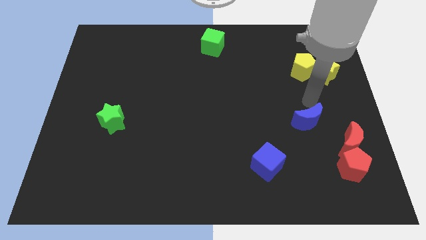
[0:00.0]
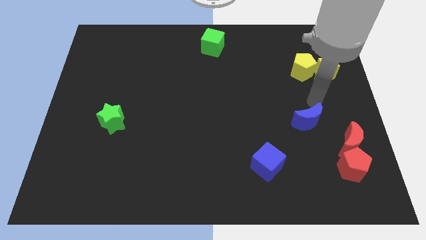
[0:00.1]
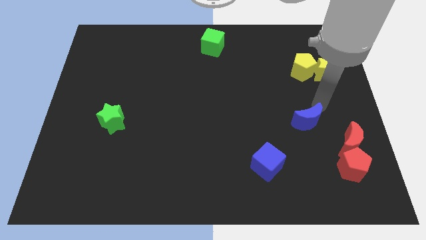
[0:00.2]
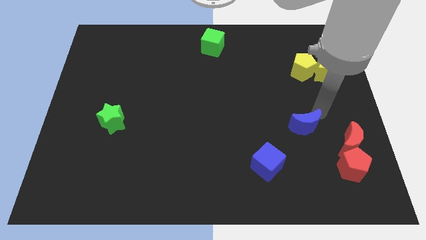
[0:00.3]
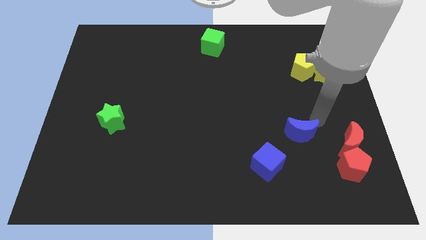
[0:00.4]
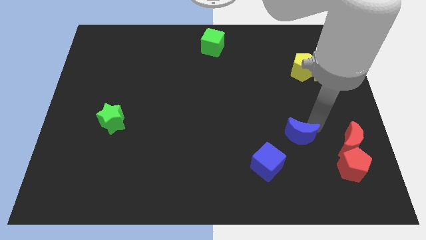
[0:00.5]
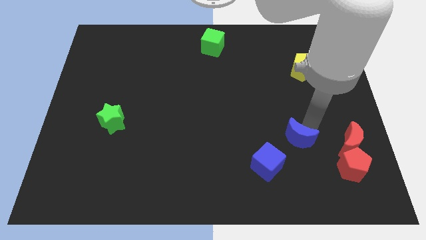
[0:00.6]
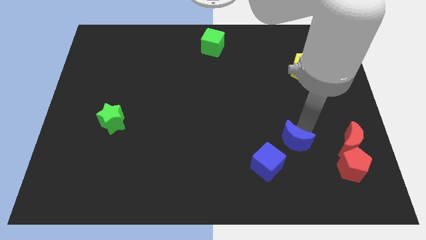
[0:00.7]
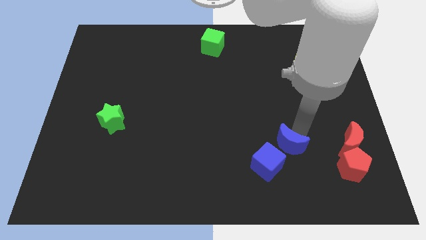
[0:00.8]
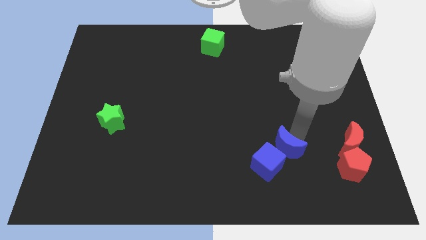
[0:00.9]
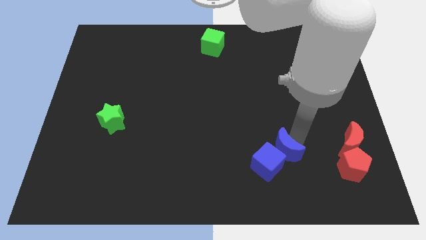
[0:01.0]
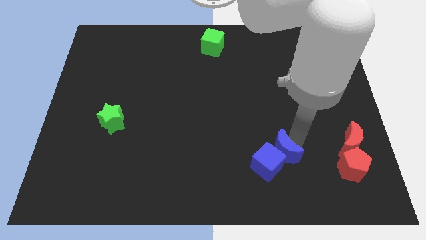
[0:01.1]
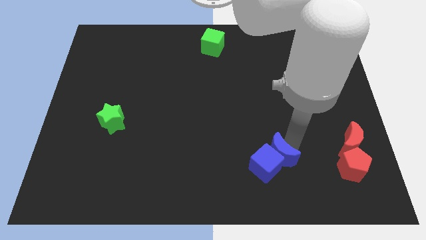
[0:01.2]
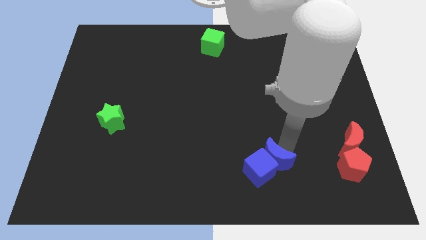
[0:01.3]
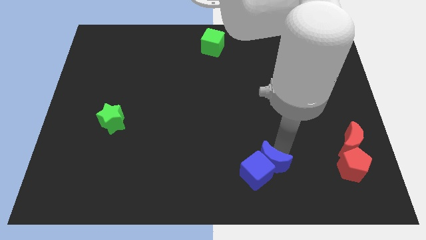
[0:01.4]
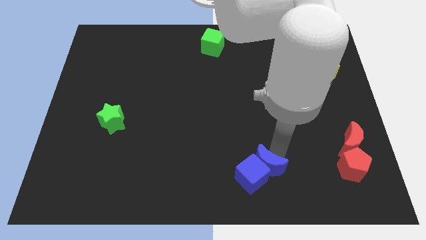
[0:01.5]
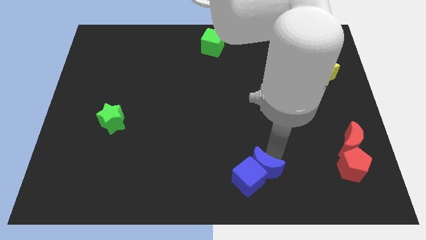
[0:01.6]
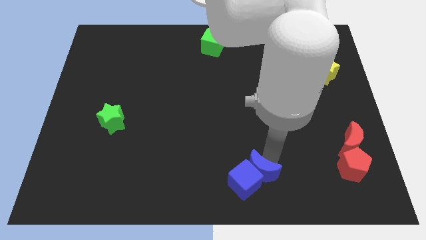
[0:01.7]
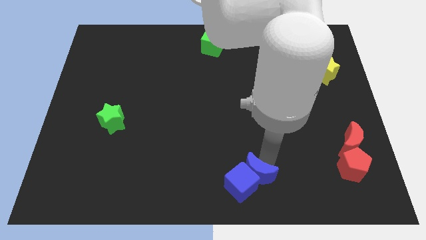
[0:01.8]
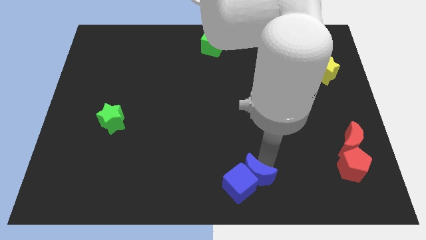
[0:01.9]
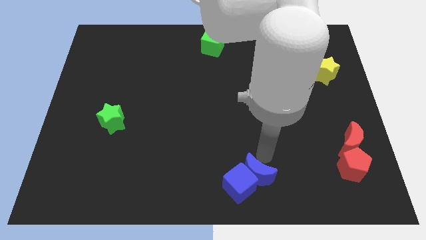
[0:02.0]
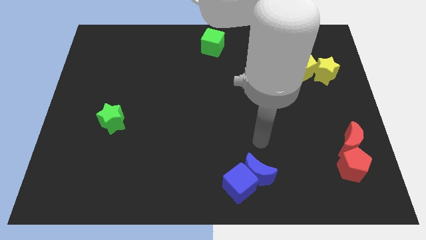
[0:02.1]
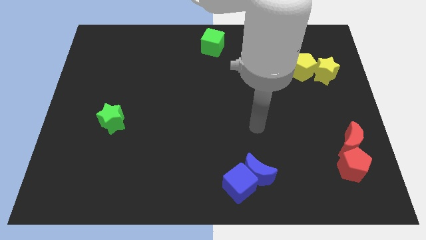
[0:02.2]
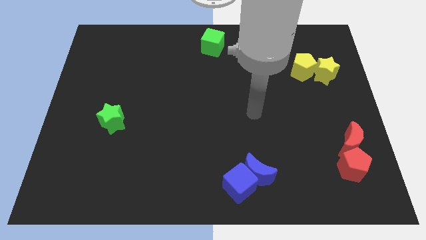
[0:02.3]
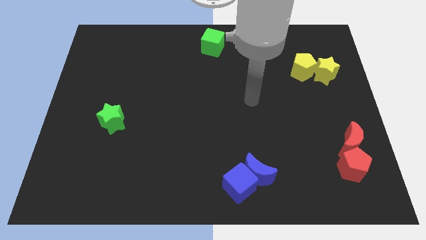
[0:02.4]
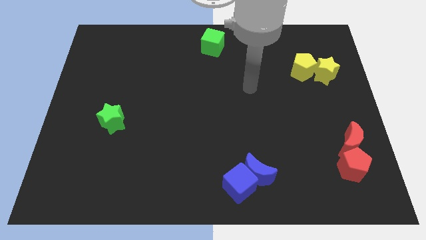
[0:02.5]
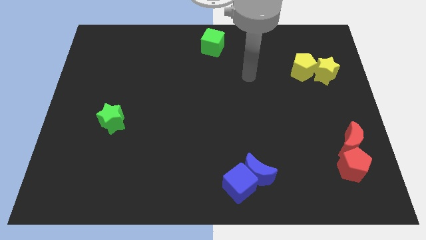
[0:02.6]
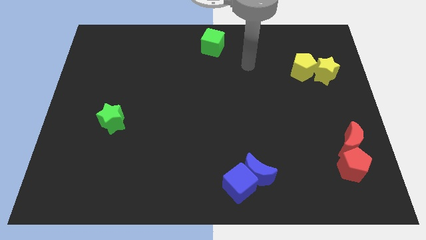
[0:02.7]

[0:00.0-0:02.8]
push the blue crescent into the blue cube towards the bottom center of the board

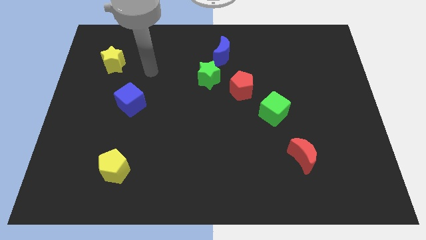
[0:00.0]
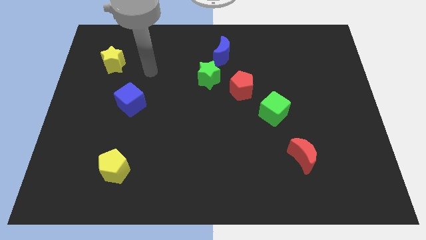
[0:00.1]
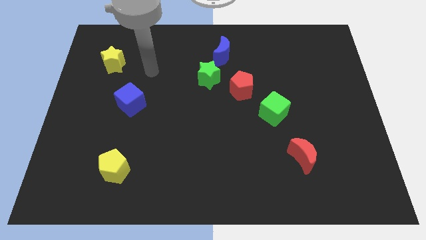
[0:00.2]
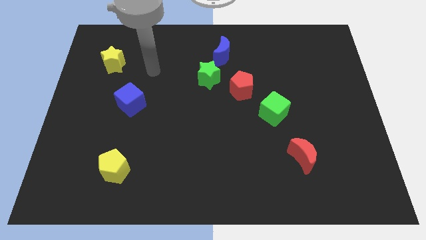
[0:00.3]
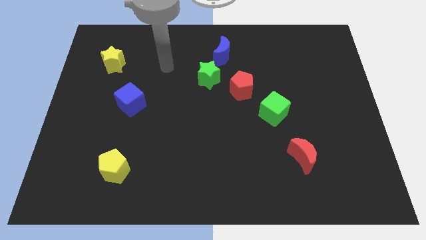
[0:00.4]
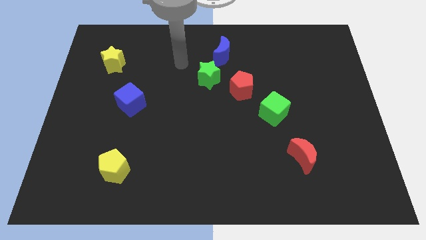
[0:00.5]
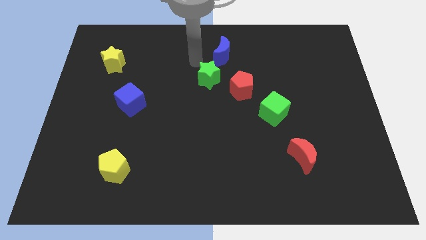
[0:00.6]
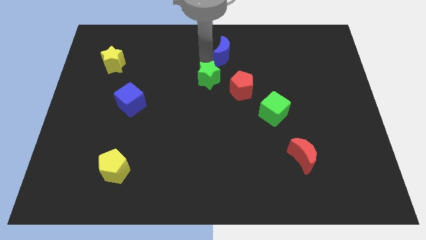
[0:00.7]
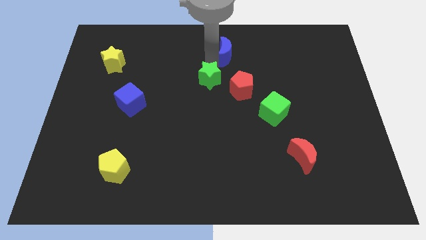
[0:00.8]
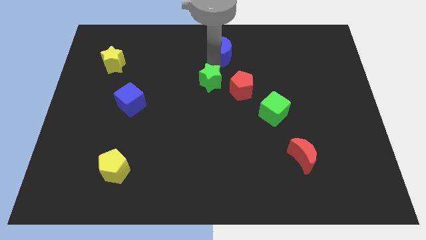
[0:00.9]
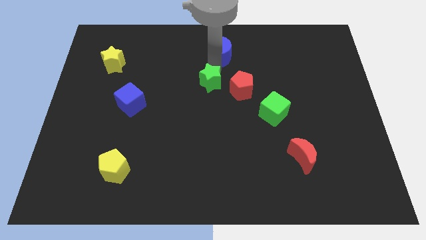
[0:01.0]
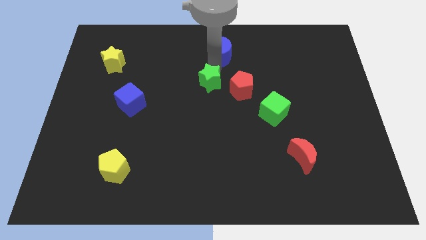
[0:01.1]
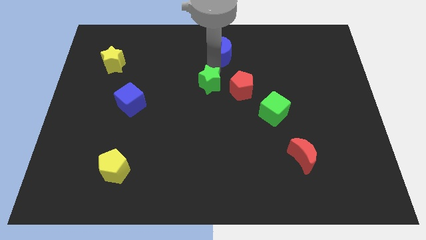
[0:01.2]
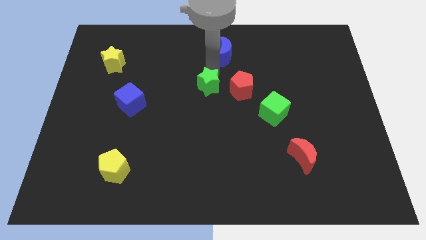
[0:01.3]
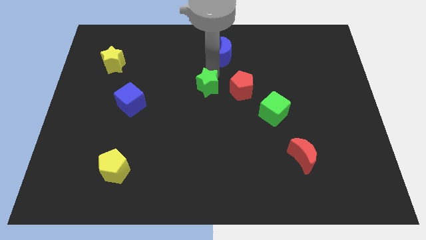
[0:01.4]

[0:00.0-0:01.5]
place your arm in between the blue moon and green star

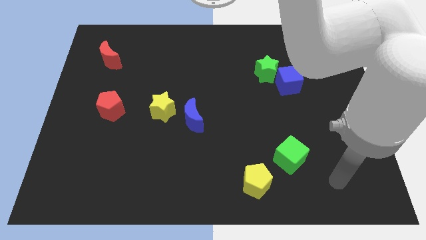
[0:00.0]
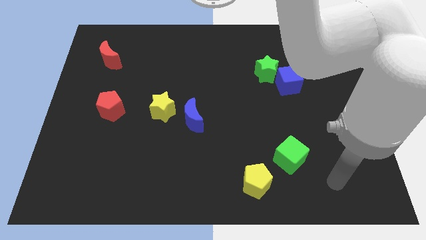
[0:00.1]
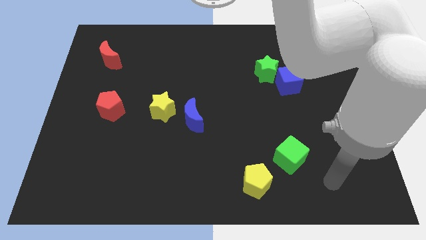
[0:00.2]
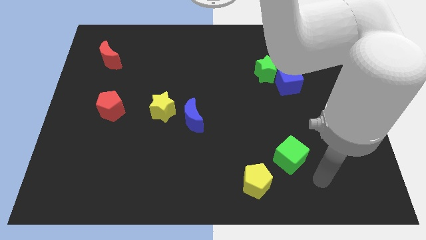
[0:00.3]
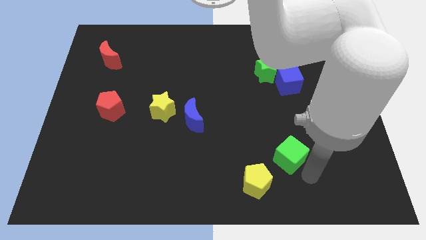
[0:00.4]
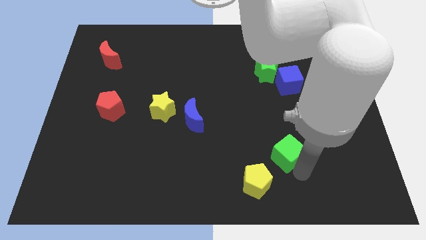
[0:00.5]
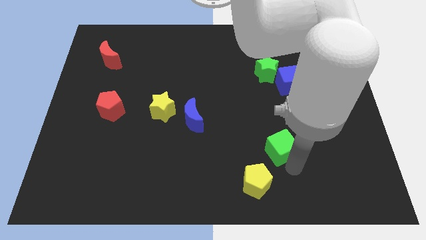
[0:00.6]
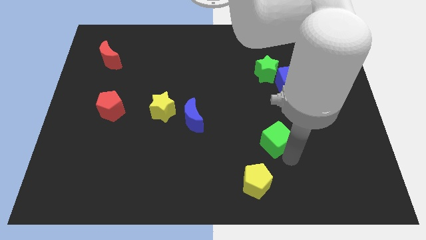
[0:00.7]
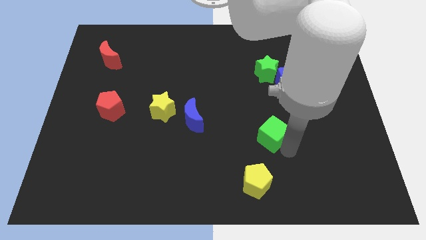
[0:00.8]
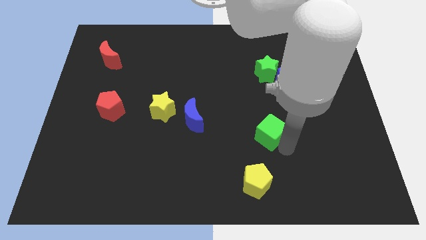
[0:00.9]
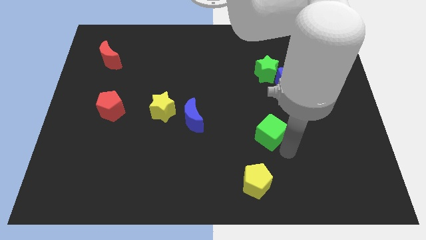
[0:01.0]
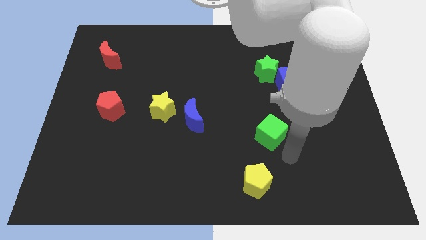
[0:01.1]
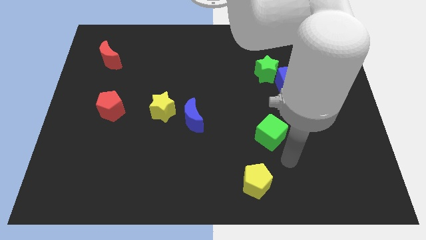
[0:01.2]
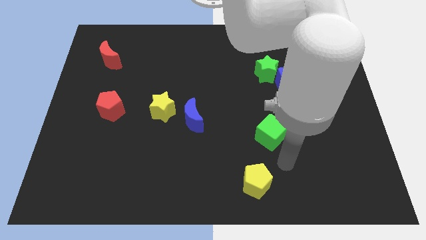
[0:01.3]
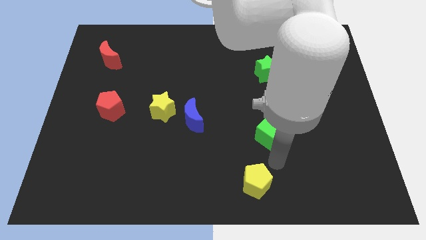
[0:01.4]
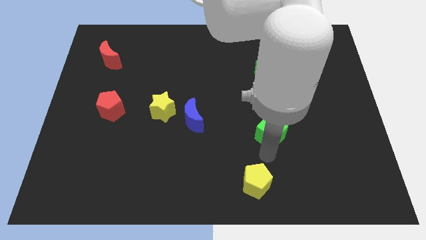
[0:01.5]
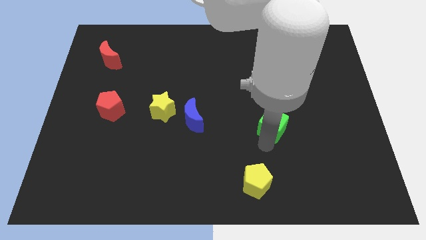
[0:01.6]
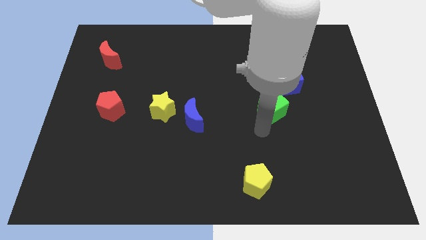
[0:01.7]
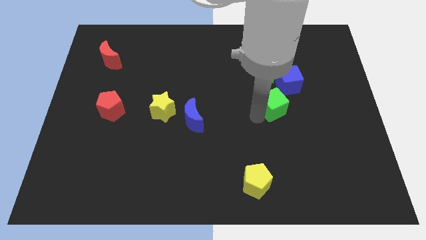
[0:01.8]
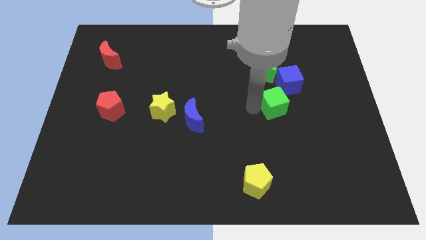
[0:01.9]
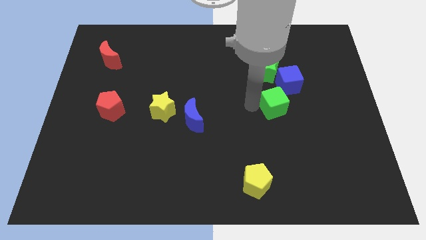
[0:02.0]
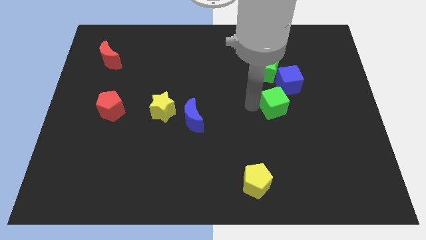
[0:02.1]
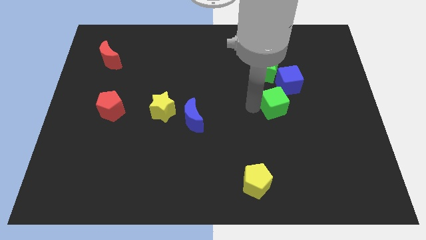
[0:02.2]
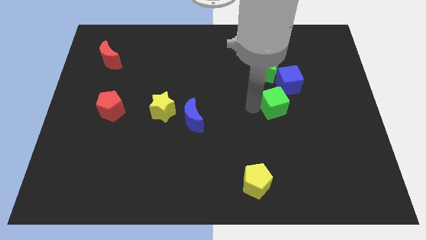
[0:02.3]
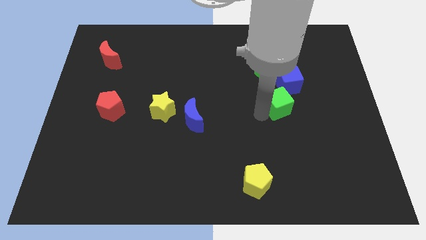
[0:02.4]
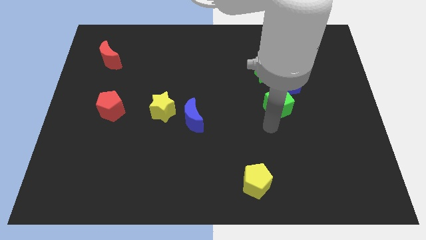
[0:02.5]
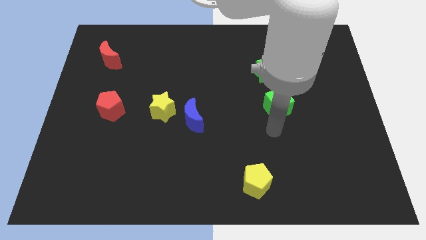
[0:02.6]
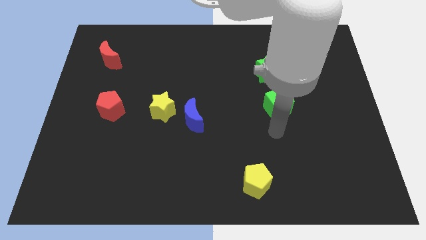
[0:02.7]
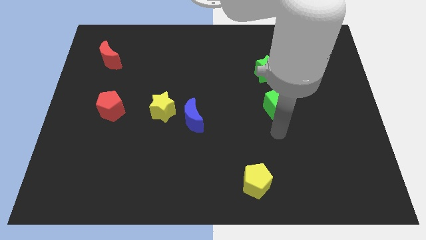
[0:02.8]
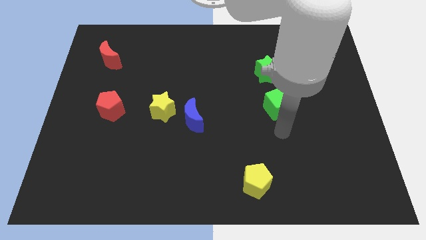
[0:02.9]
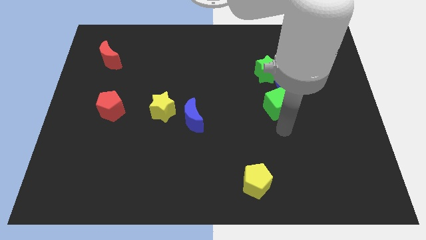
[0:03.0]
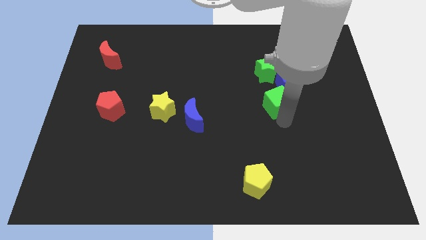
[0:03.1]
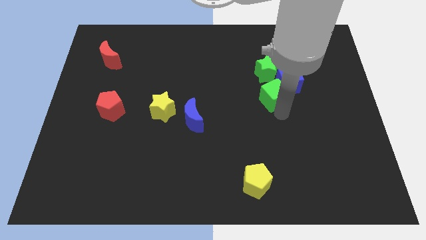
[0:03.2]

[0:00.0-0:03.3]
place the green cube below the green star

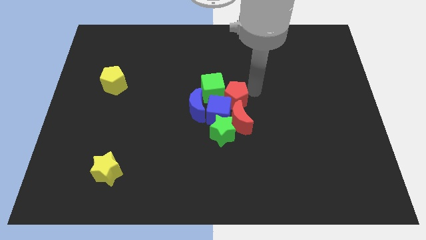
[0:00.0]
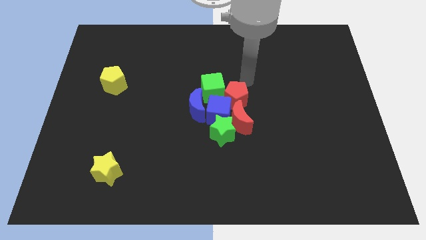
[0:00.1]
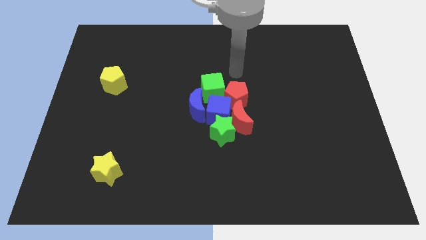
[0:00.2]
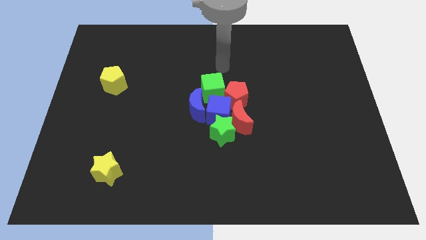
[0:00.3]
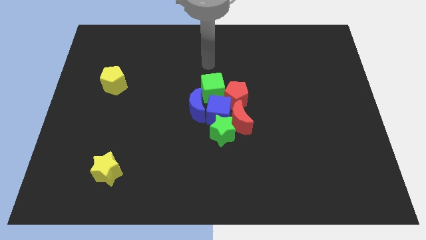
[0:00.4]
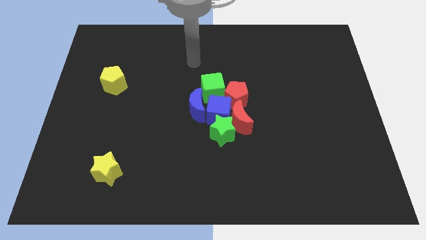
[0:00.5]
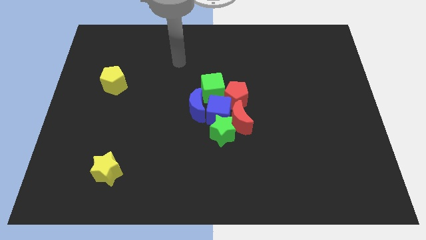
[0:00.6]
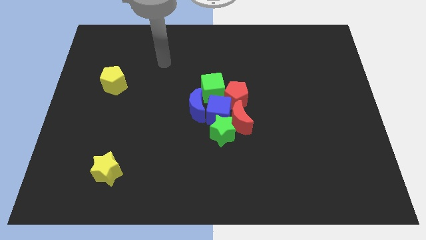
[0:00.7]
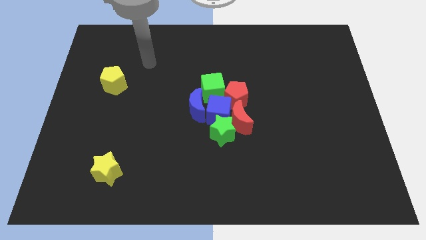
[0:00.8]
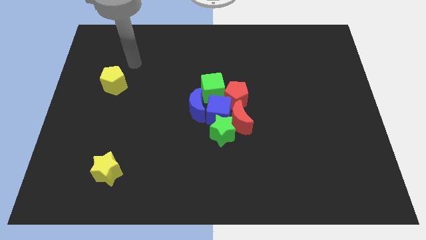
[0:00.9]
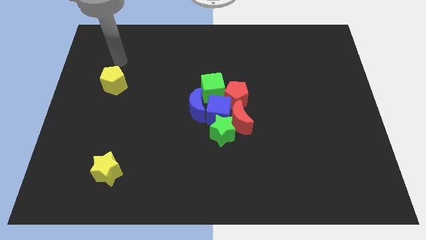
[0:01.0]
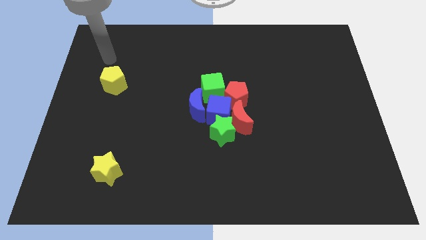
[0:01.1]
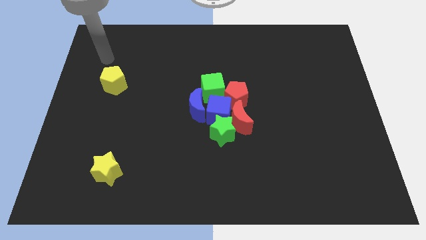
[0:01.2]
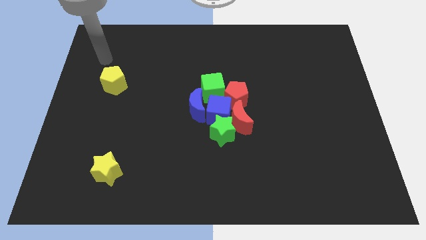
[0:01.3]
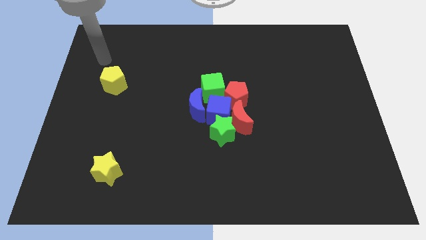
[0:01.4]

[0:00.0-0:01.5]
move your arm away from red pentagon
